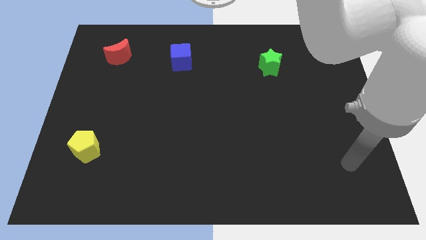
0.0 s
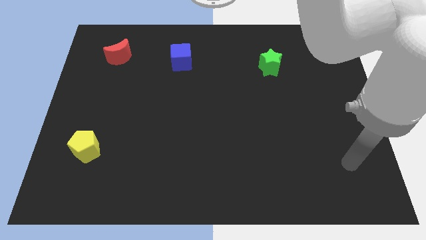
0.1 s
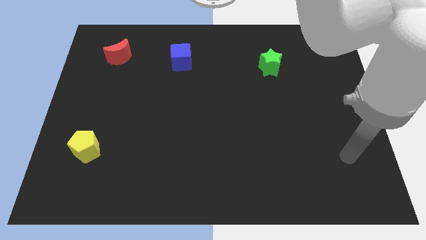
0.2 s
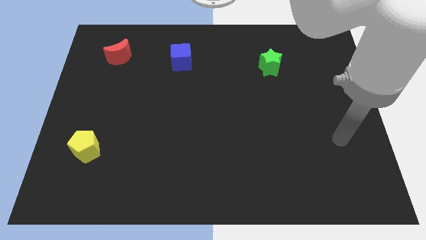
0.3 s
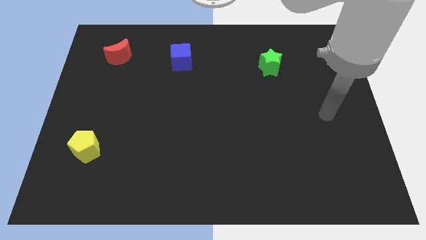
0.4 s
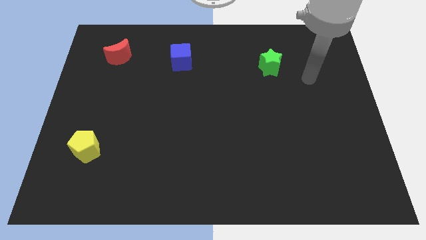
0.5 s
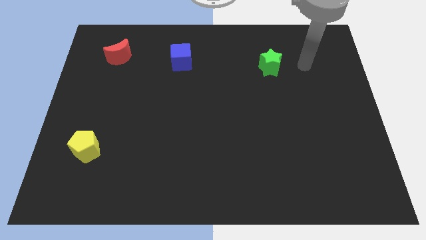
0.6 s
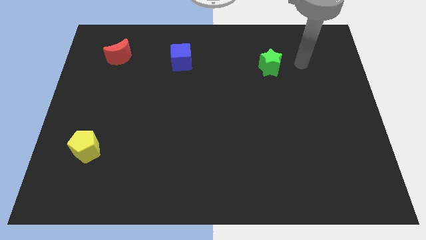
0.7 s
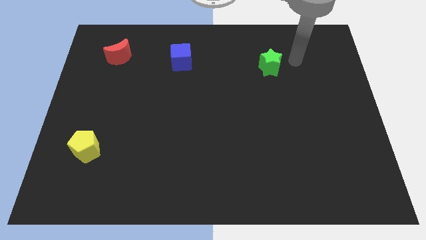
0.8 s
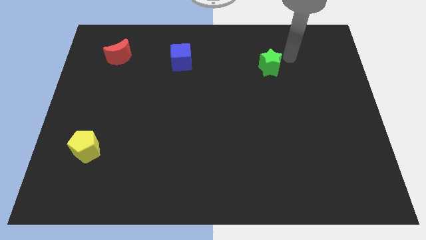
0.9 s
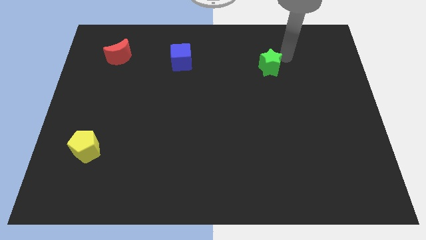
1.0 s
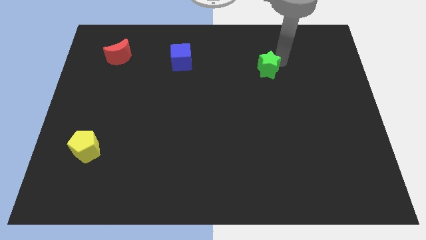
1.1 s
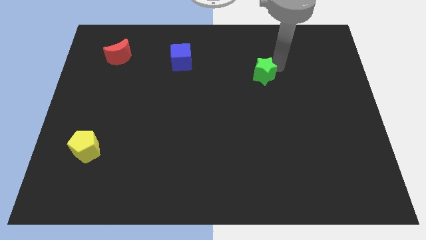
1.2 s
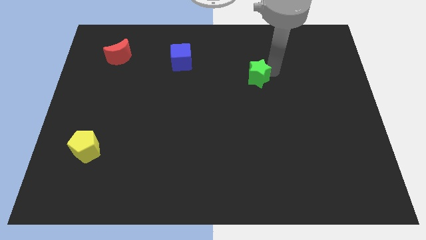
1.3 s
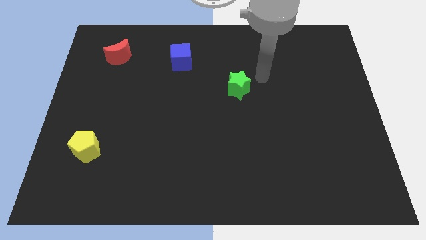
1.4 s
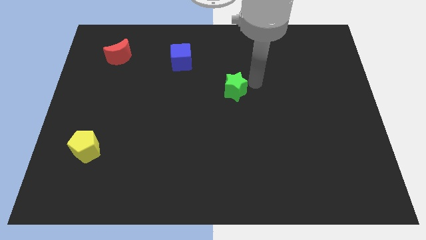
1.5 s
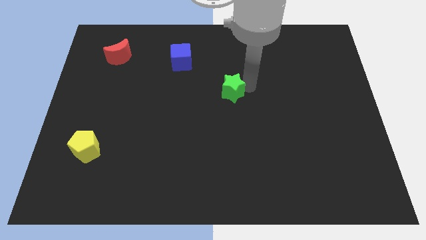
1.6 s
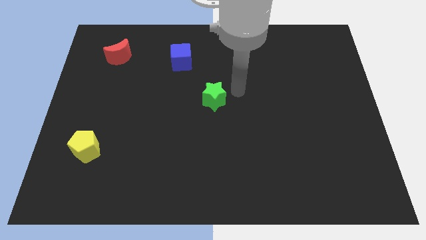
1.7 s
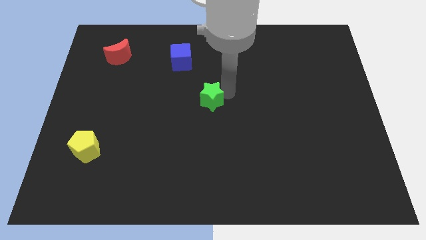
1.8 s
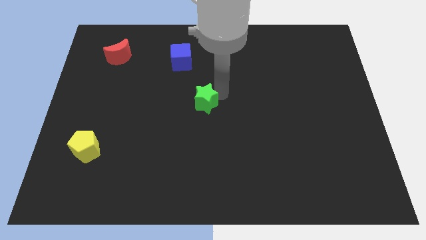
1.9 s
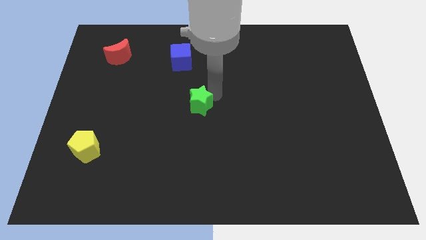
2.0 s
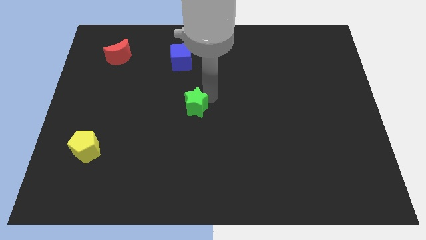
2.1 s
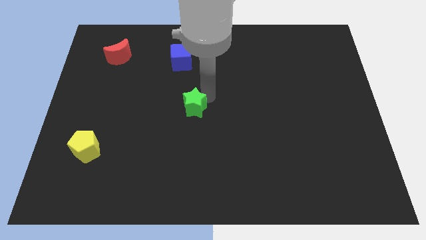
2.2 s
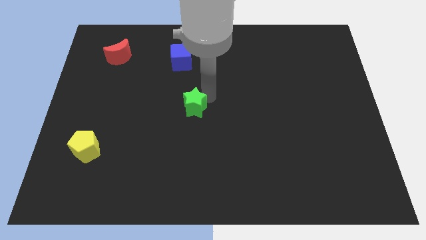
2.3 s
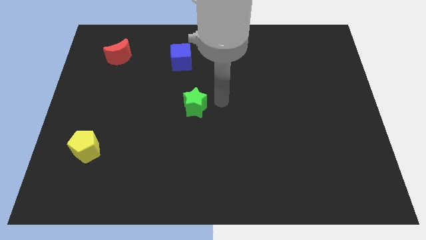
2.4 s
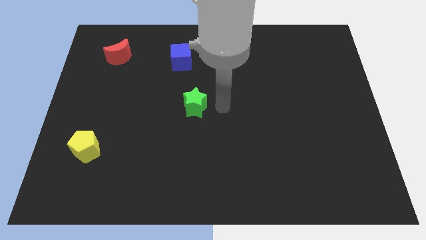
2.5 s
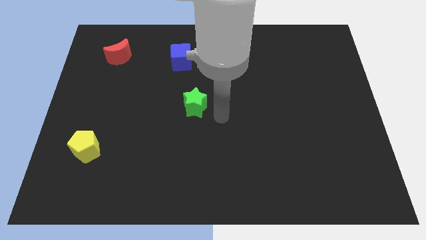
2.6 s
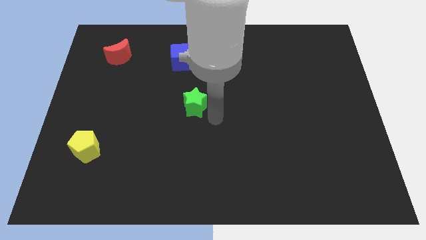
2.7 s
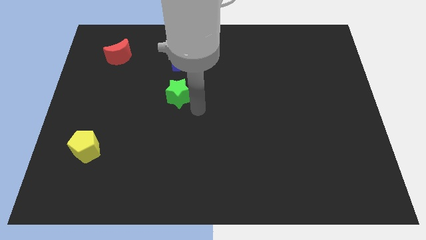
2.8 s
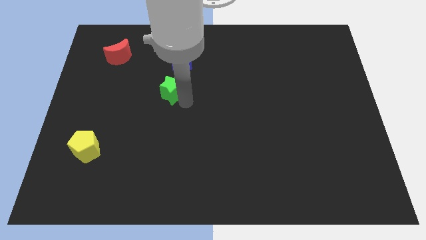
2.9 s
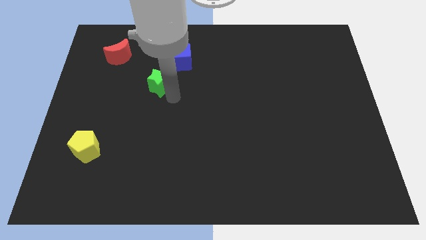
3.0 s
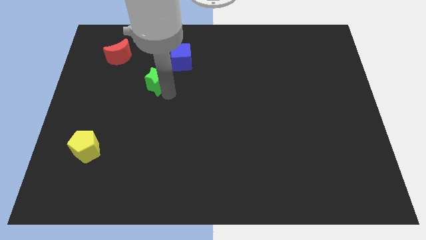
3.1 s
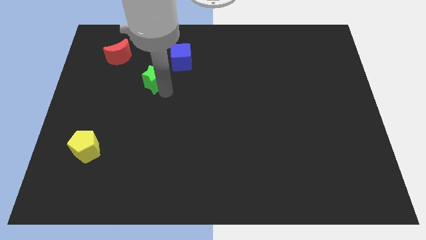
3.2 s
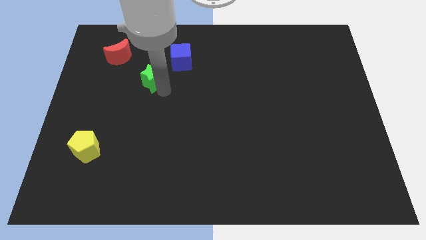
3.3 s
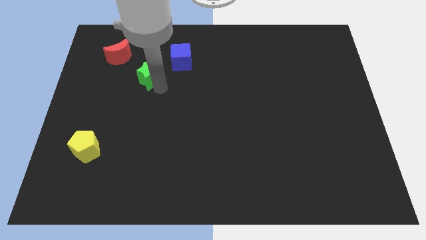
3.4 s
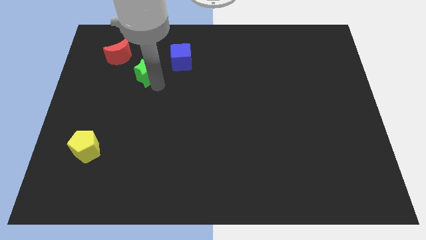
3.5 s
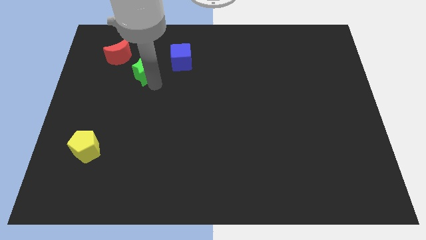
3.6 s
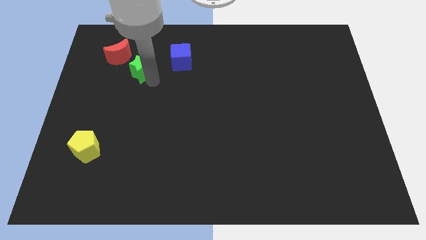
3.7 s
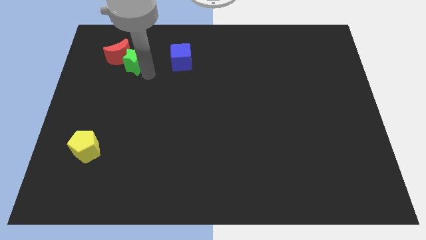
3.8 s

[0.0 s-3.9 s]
push the green star to the moon

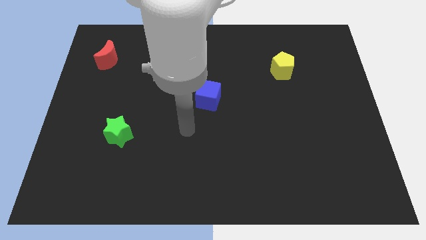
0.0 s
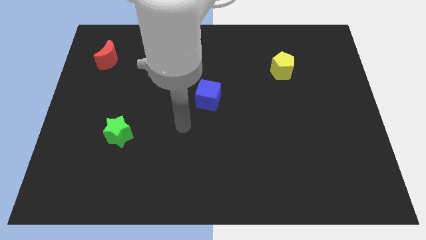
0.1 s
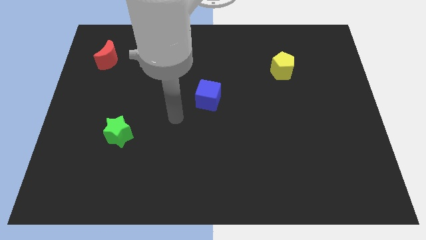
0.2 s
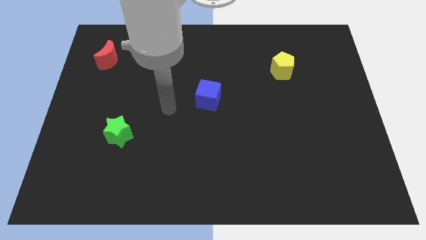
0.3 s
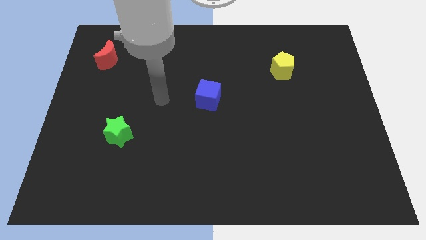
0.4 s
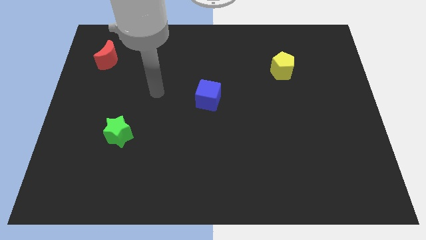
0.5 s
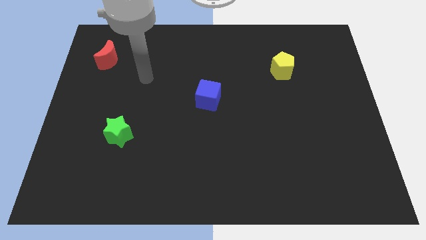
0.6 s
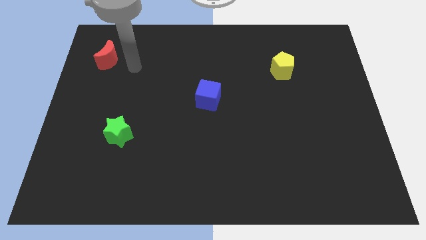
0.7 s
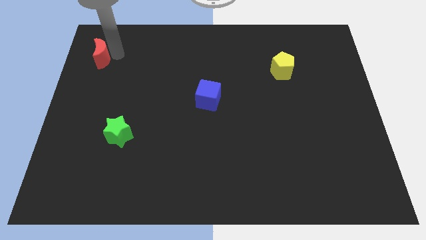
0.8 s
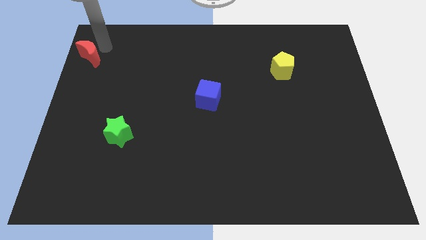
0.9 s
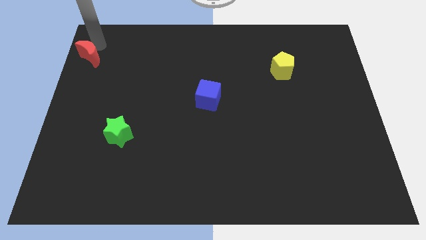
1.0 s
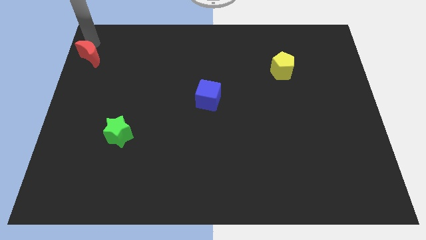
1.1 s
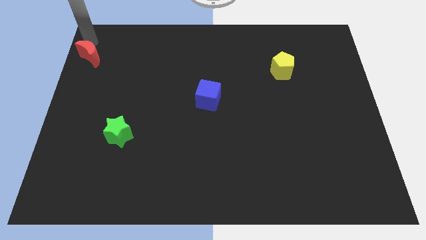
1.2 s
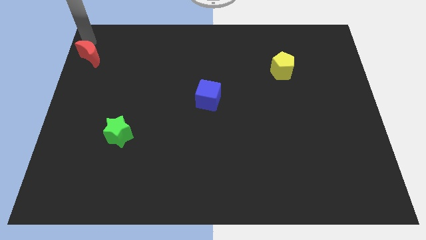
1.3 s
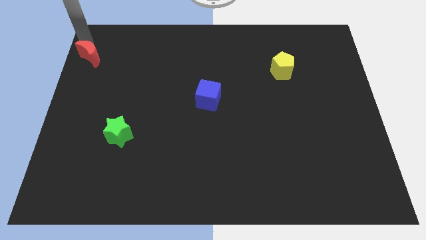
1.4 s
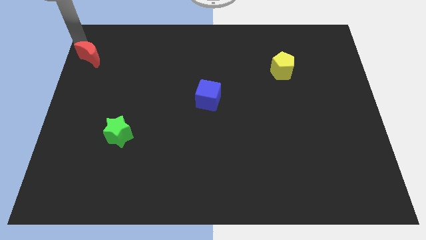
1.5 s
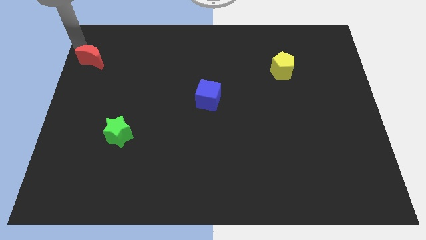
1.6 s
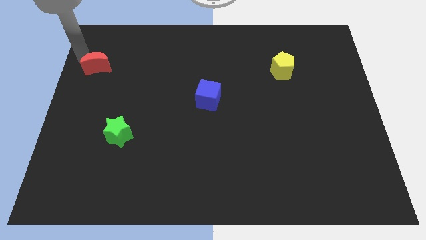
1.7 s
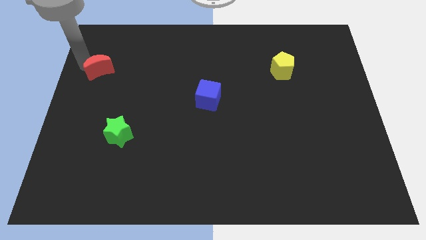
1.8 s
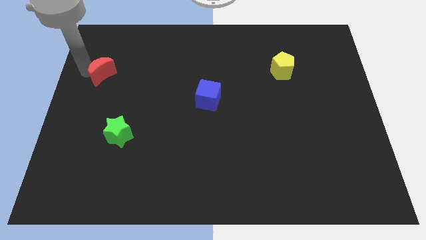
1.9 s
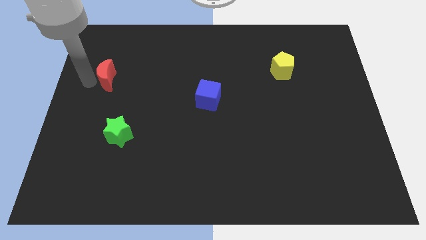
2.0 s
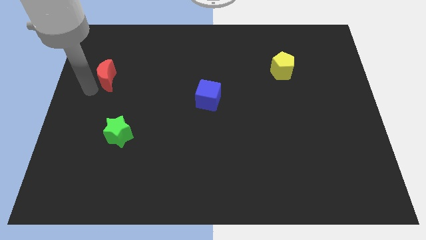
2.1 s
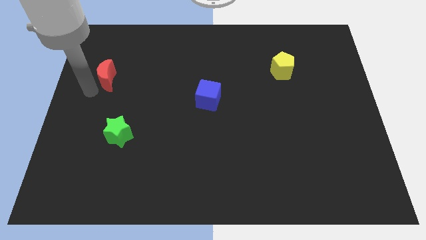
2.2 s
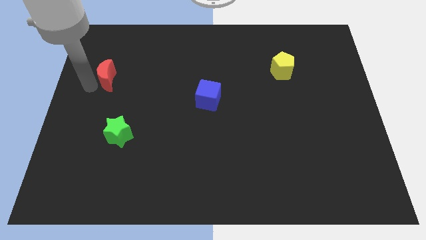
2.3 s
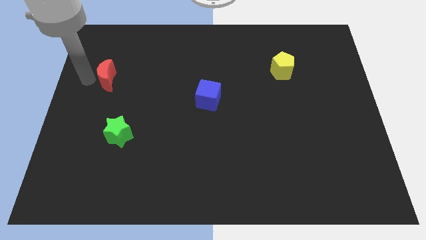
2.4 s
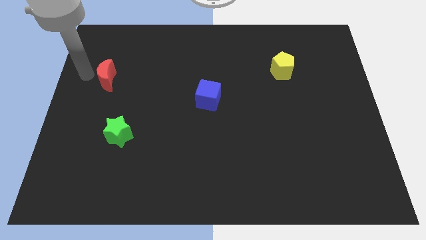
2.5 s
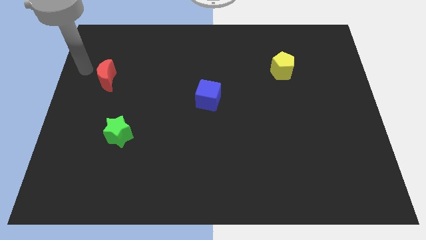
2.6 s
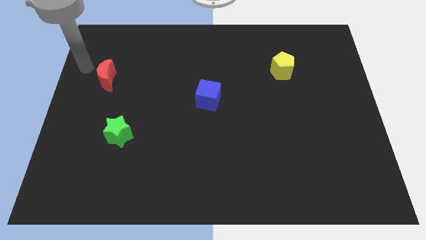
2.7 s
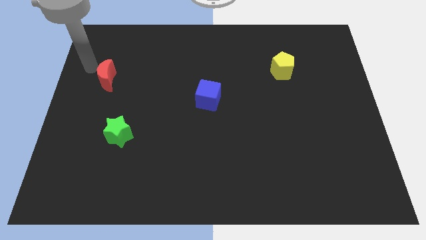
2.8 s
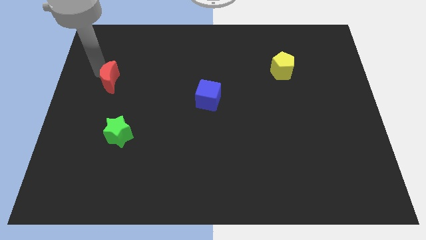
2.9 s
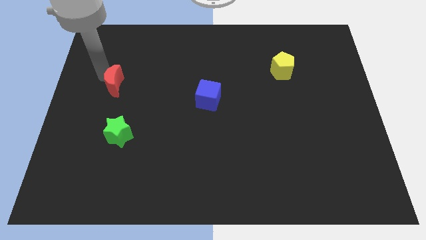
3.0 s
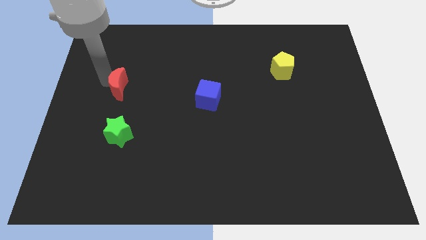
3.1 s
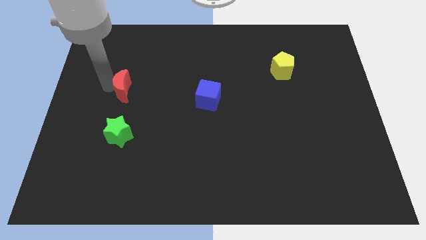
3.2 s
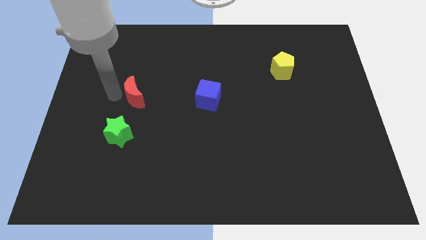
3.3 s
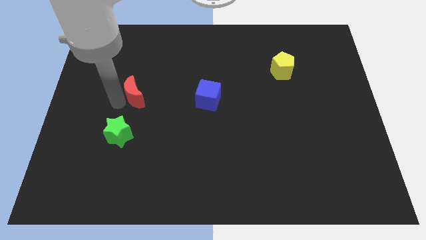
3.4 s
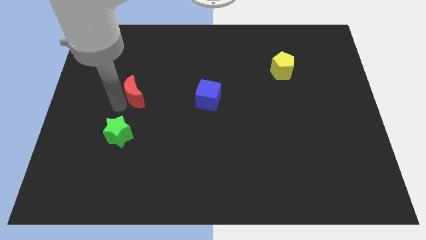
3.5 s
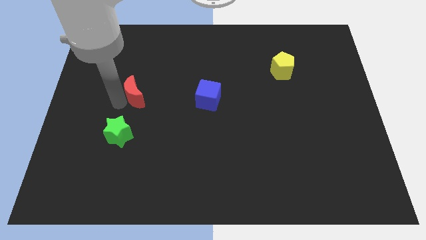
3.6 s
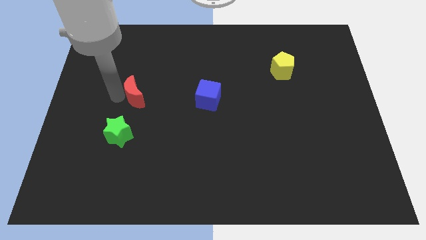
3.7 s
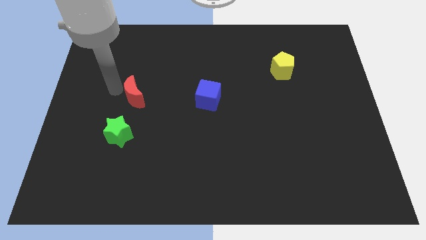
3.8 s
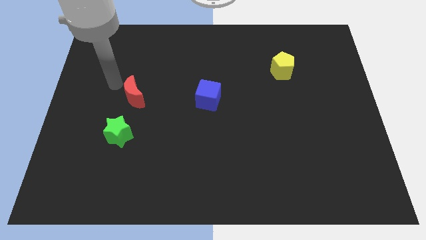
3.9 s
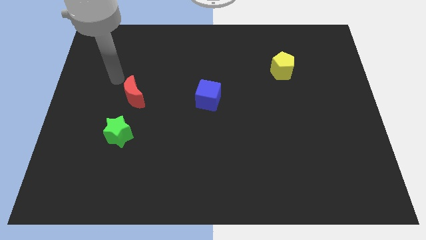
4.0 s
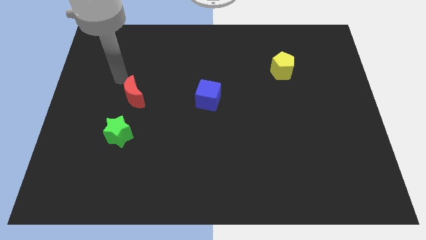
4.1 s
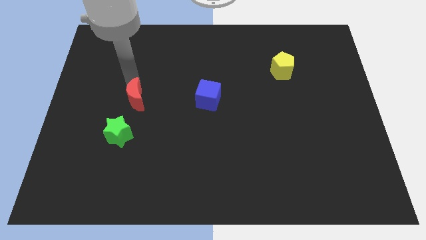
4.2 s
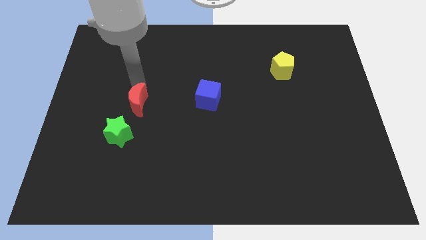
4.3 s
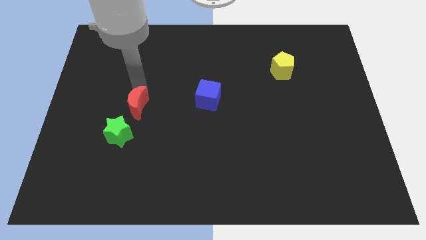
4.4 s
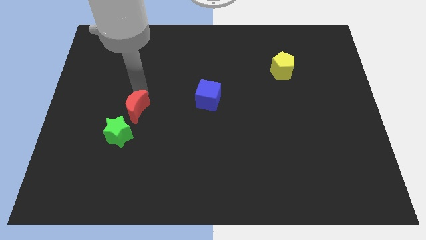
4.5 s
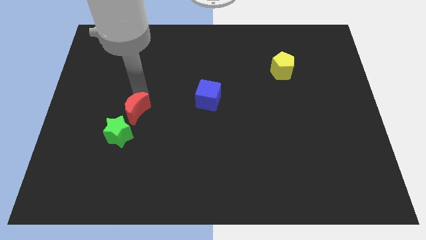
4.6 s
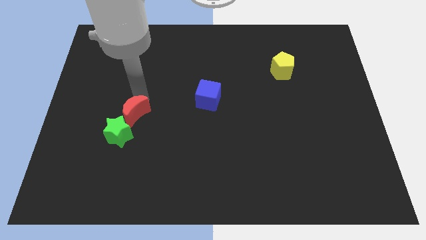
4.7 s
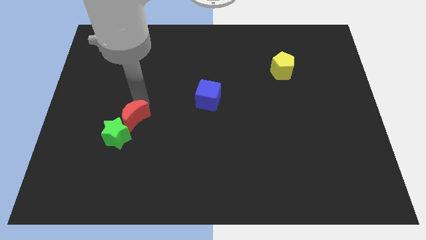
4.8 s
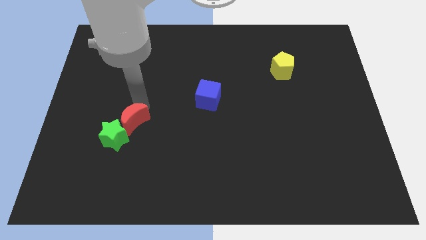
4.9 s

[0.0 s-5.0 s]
slide the red moon towards the green star

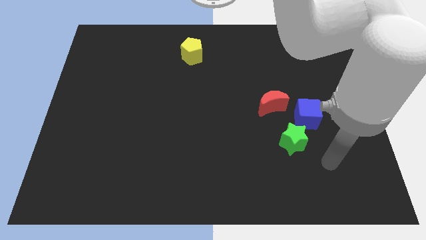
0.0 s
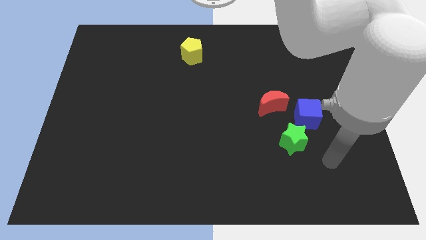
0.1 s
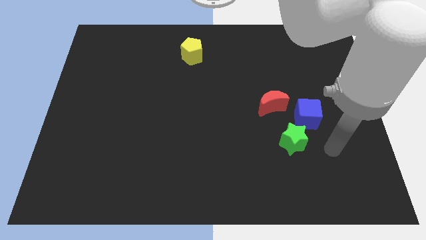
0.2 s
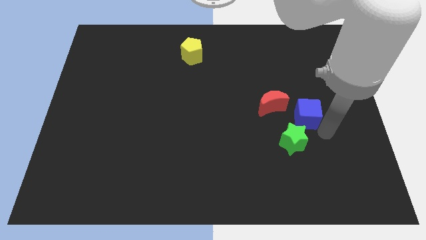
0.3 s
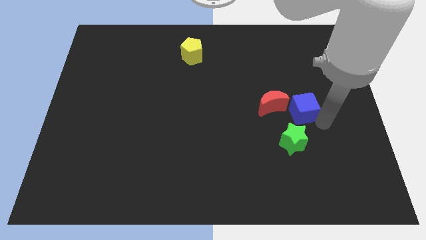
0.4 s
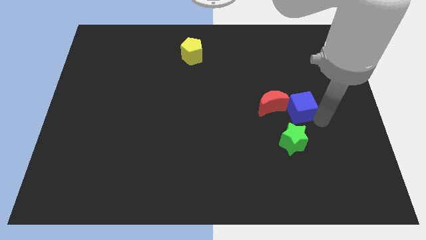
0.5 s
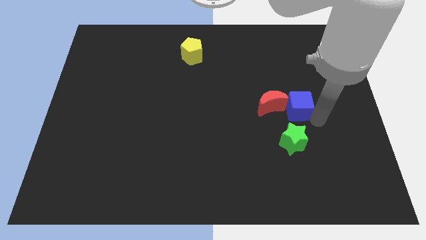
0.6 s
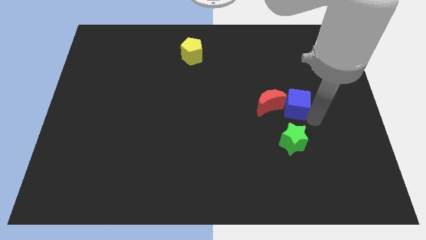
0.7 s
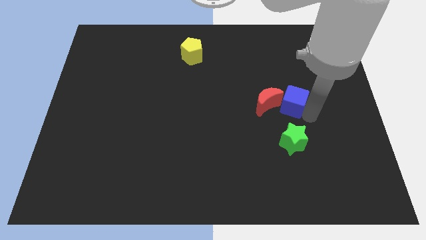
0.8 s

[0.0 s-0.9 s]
slide the blue cube next to the red moon
